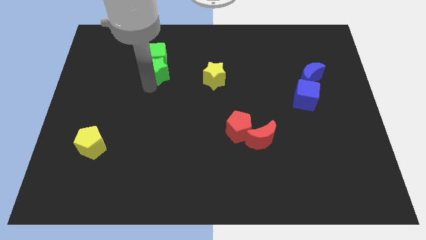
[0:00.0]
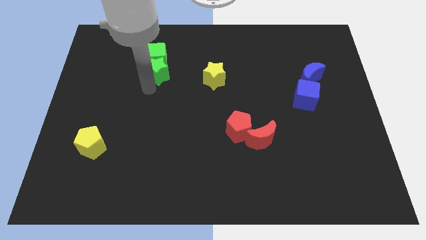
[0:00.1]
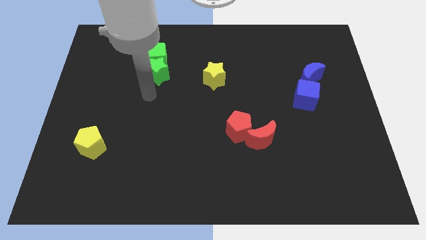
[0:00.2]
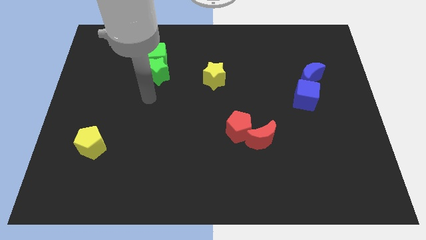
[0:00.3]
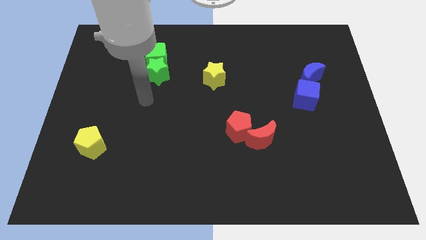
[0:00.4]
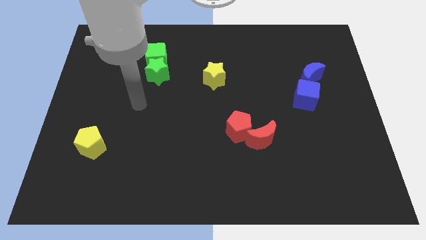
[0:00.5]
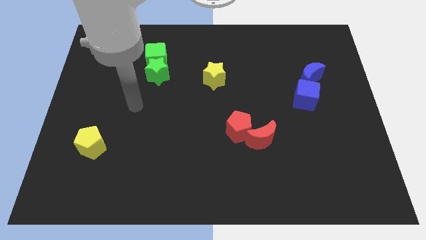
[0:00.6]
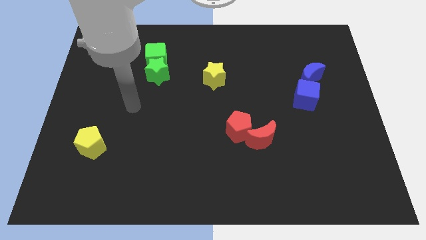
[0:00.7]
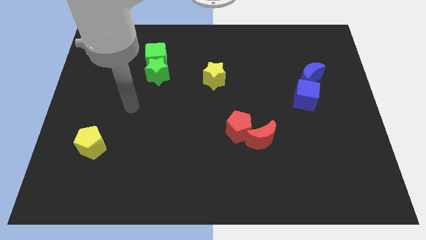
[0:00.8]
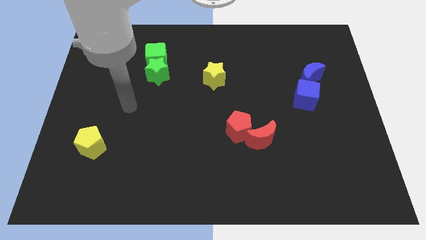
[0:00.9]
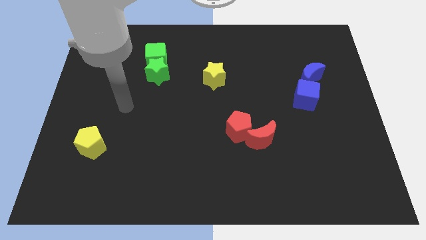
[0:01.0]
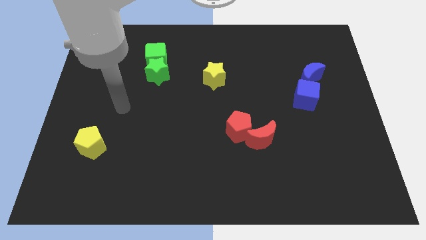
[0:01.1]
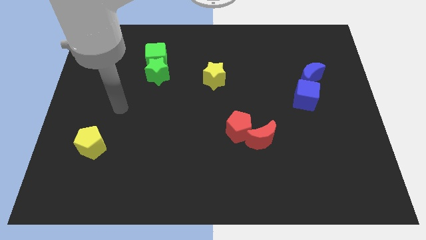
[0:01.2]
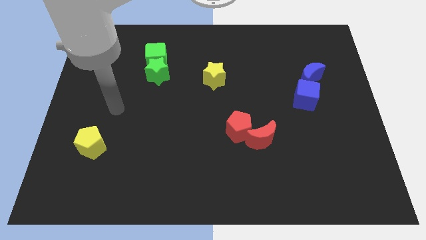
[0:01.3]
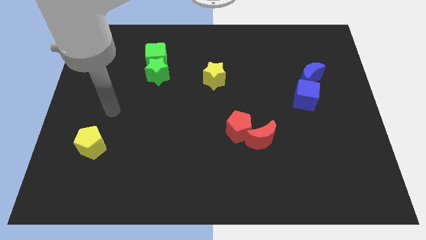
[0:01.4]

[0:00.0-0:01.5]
move your arm away from the green star

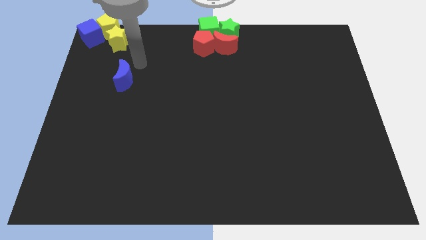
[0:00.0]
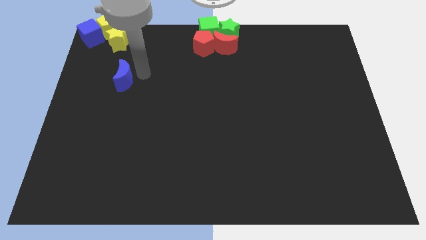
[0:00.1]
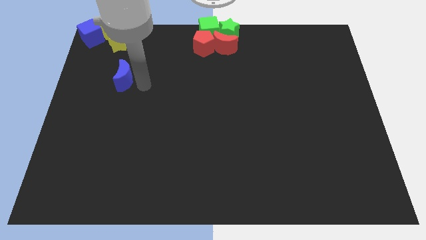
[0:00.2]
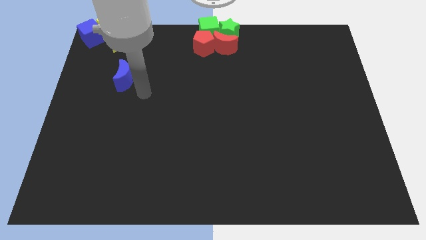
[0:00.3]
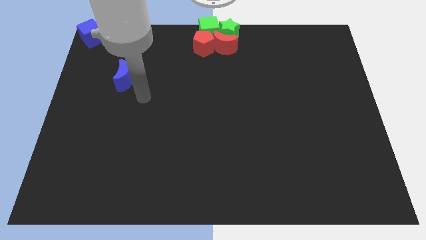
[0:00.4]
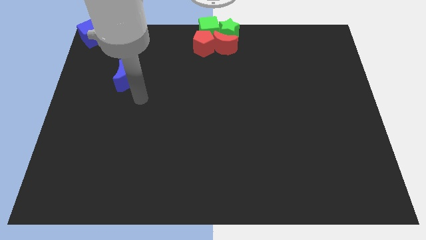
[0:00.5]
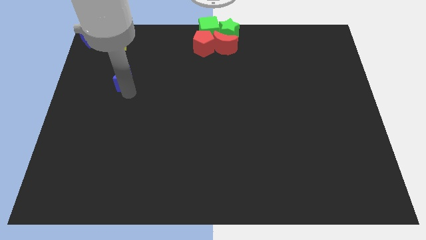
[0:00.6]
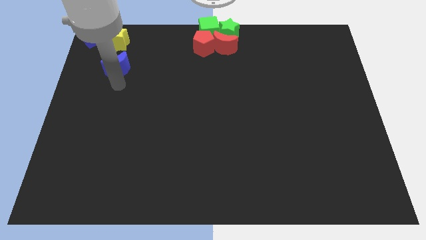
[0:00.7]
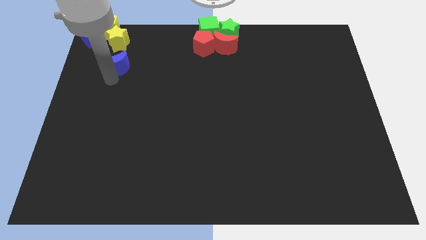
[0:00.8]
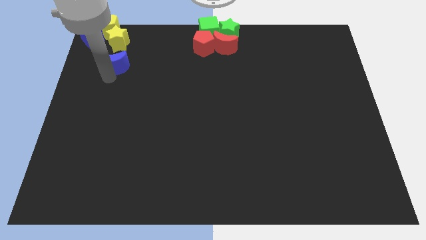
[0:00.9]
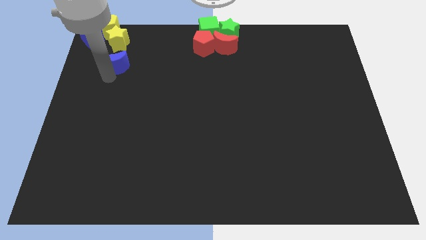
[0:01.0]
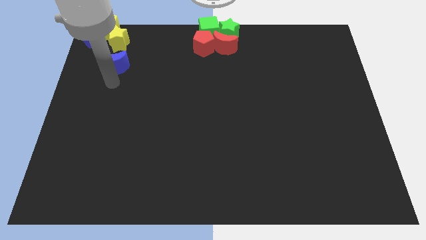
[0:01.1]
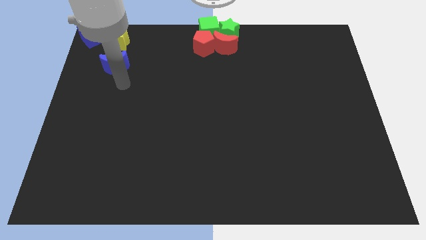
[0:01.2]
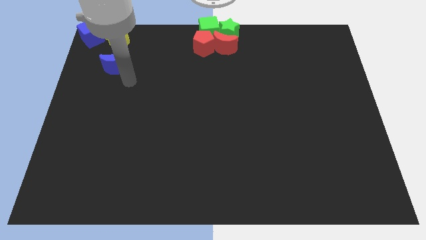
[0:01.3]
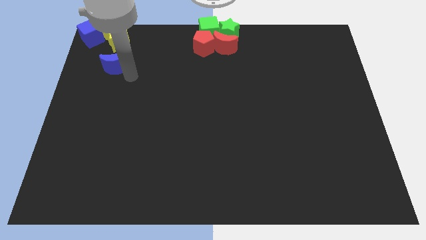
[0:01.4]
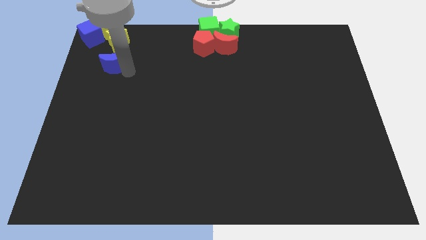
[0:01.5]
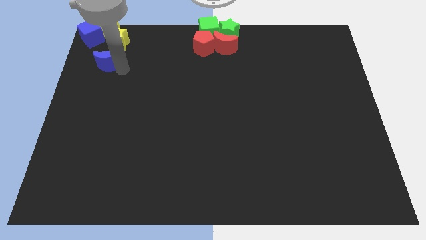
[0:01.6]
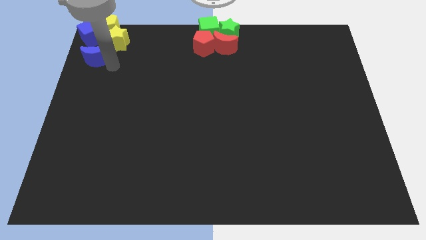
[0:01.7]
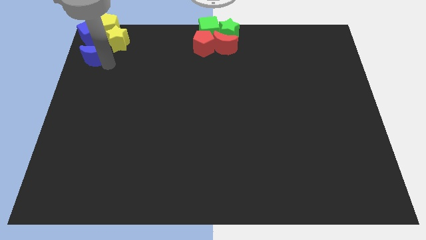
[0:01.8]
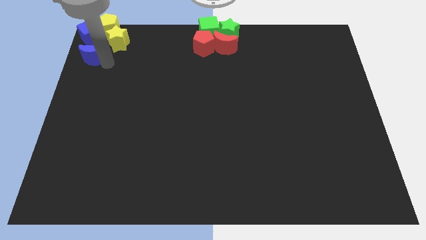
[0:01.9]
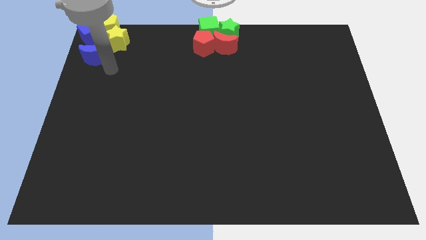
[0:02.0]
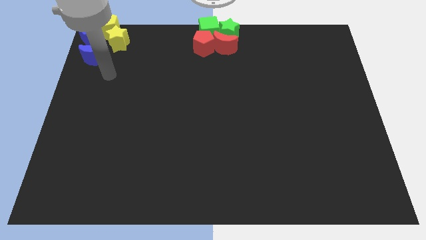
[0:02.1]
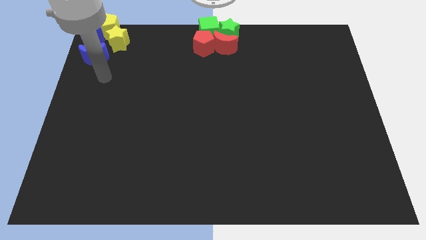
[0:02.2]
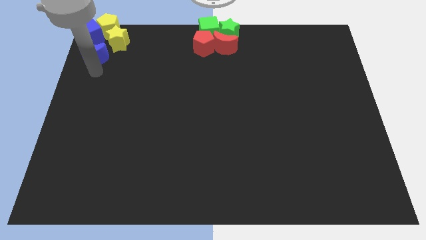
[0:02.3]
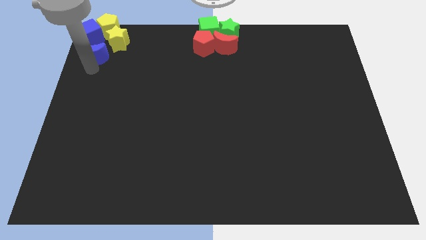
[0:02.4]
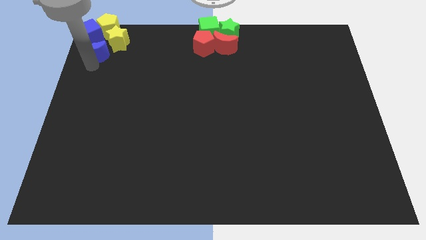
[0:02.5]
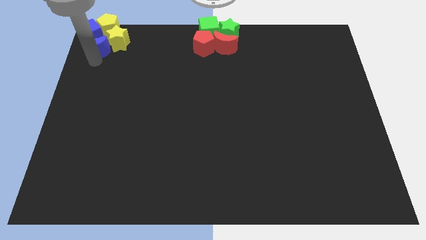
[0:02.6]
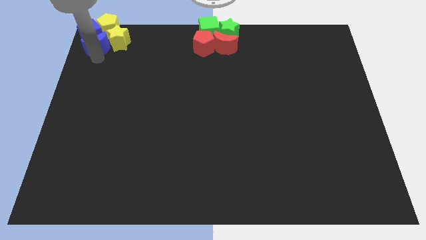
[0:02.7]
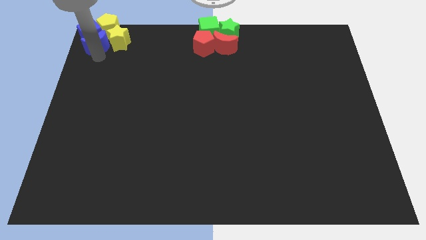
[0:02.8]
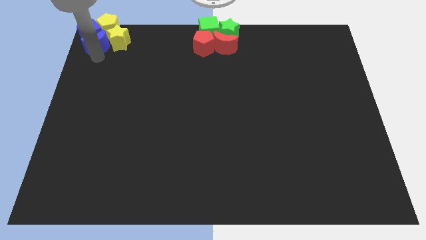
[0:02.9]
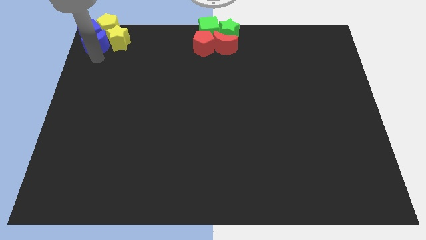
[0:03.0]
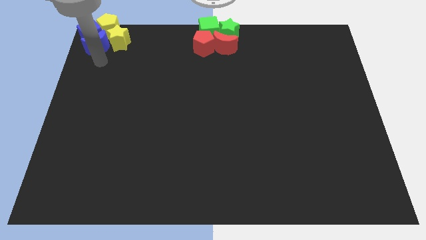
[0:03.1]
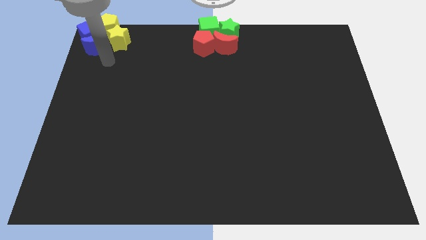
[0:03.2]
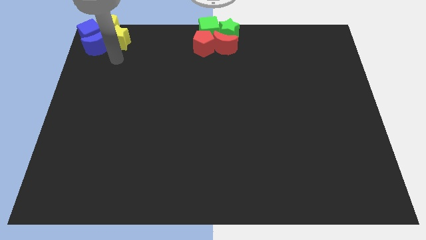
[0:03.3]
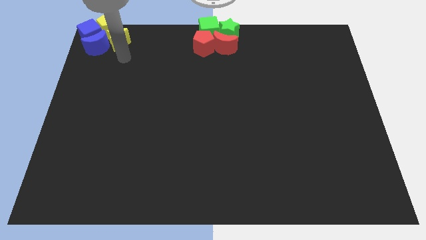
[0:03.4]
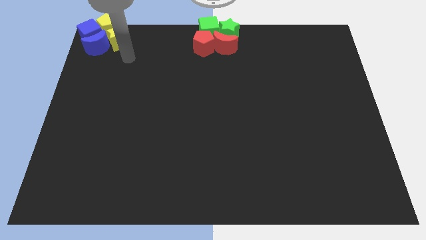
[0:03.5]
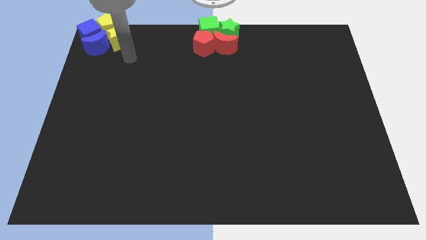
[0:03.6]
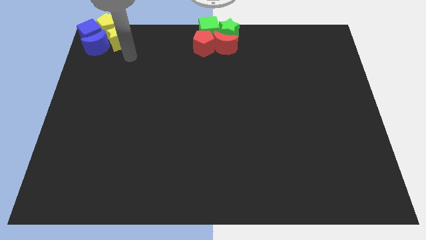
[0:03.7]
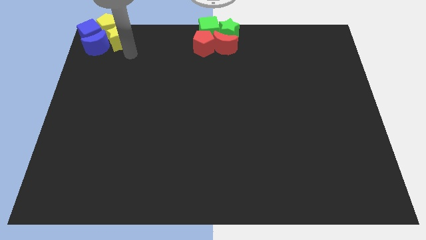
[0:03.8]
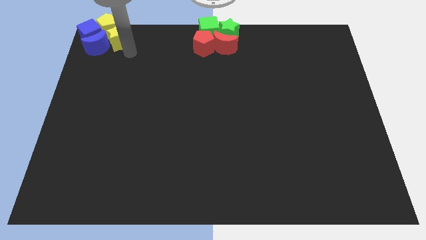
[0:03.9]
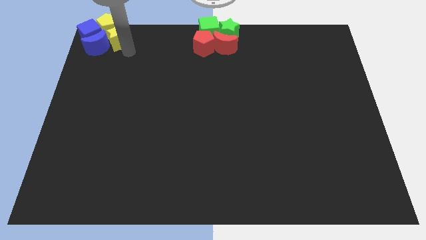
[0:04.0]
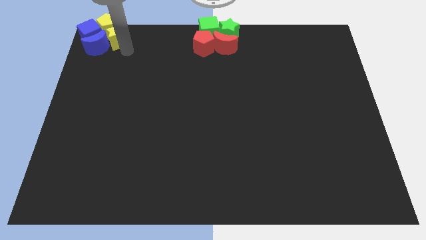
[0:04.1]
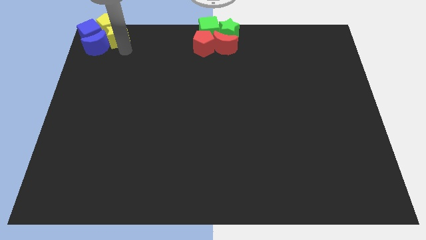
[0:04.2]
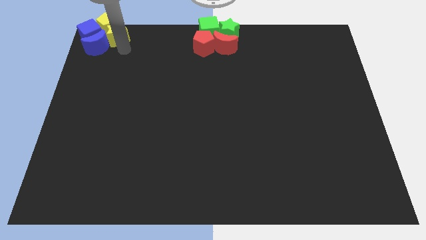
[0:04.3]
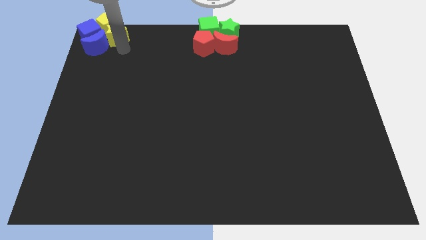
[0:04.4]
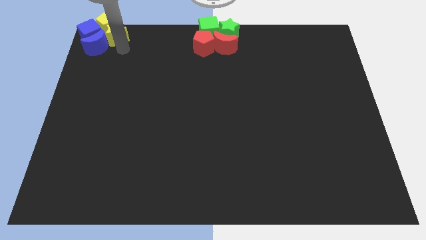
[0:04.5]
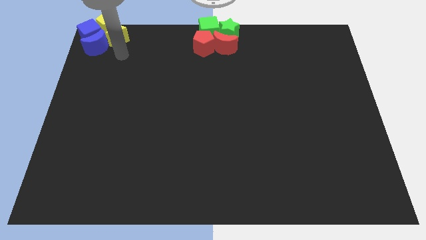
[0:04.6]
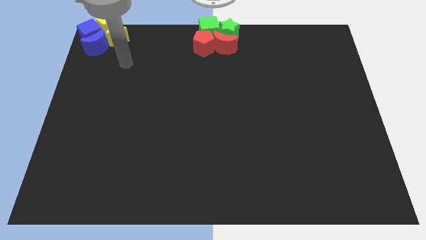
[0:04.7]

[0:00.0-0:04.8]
push the blue crescent into the blue cube

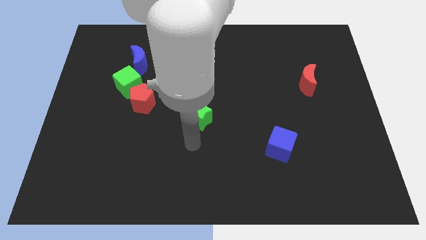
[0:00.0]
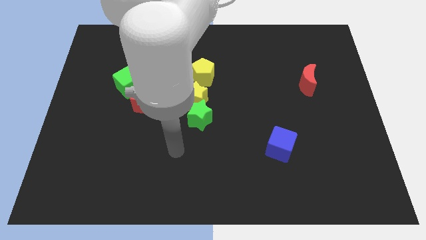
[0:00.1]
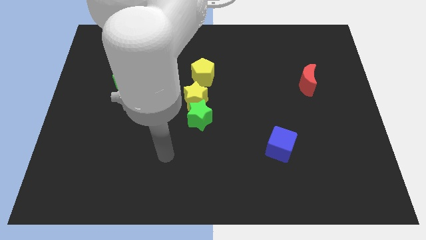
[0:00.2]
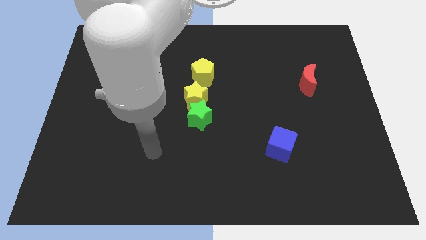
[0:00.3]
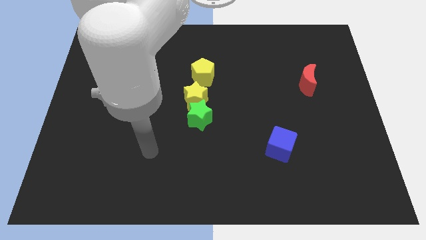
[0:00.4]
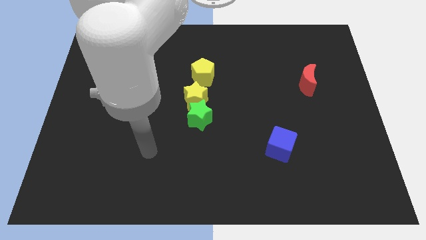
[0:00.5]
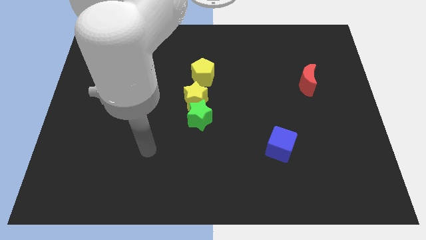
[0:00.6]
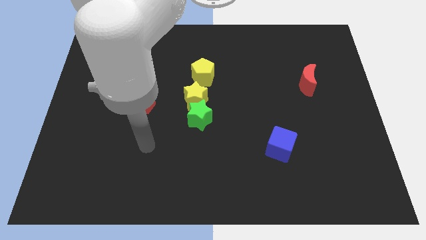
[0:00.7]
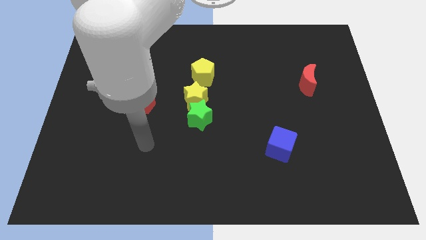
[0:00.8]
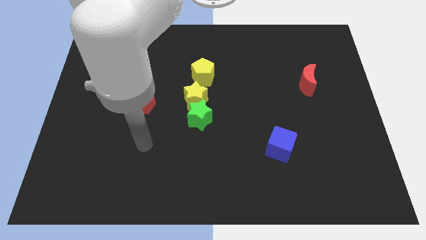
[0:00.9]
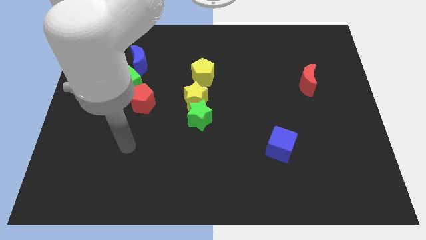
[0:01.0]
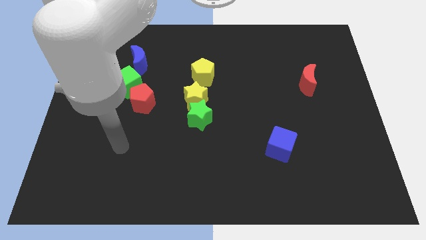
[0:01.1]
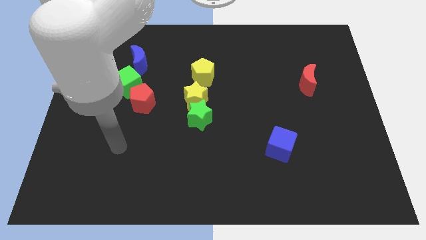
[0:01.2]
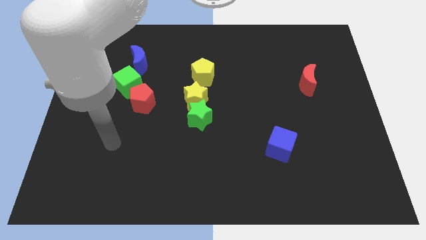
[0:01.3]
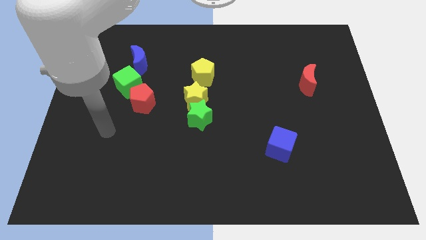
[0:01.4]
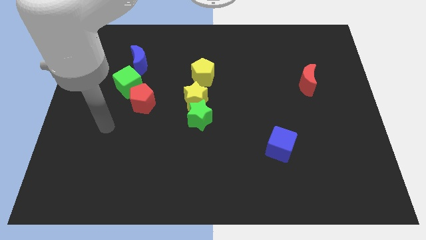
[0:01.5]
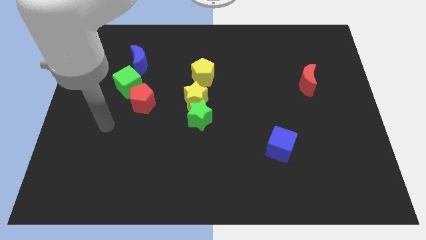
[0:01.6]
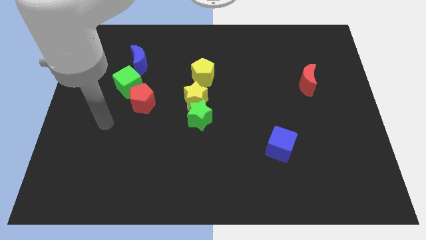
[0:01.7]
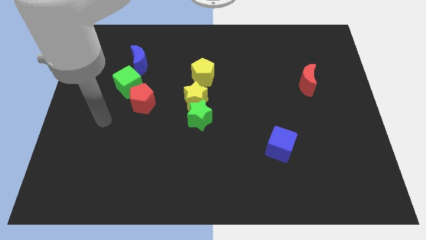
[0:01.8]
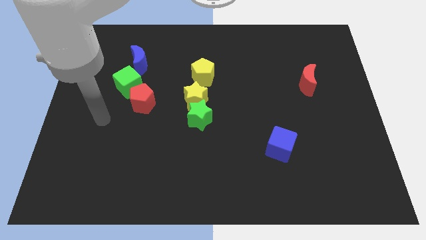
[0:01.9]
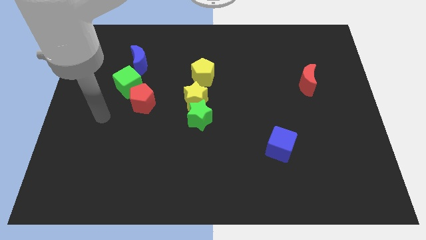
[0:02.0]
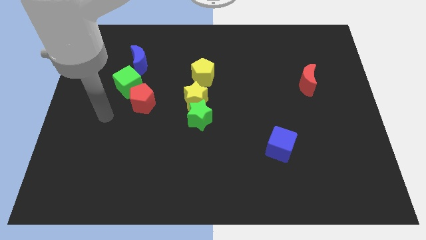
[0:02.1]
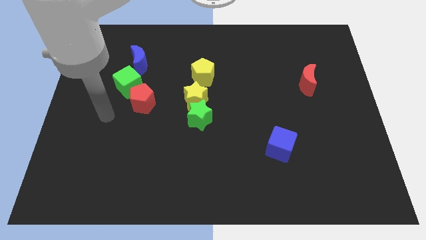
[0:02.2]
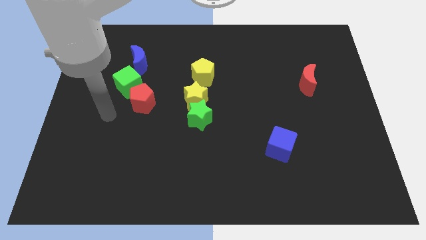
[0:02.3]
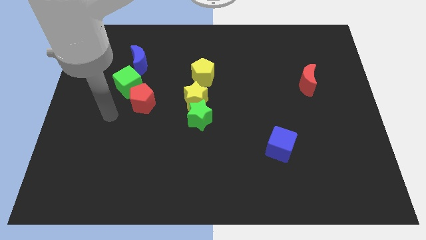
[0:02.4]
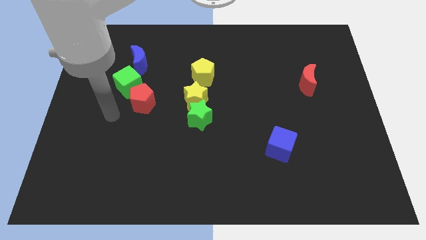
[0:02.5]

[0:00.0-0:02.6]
move yourself away from the green star
